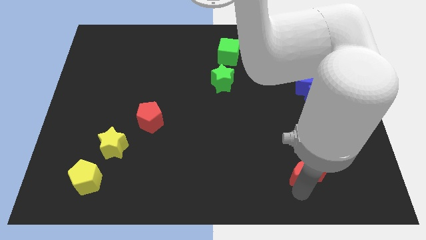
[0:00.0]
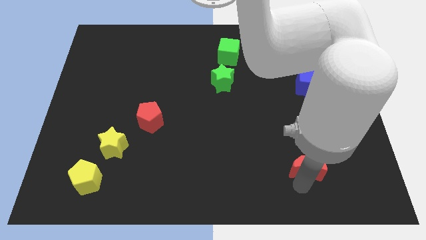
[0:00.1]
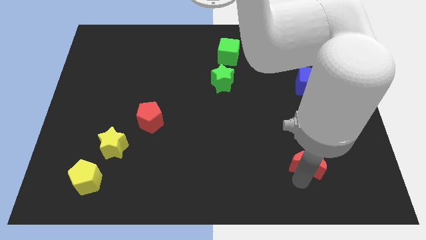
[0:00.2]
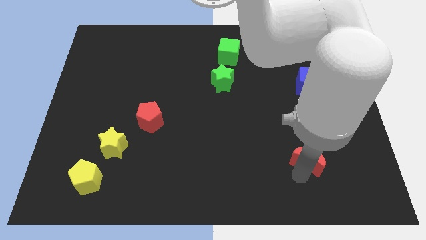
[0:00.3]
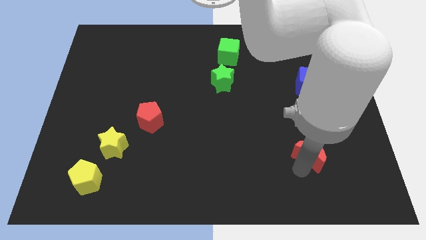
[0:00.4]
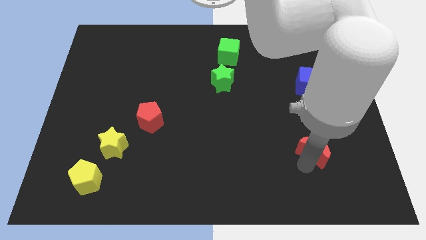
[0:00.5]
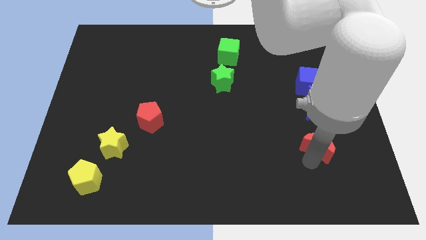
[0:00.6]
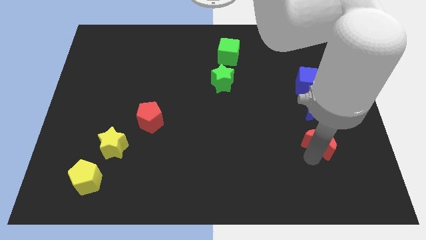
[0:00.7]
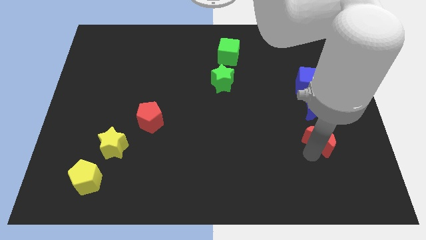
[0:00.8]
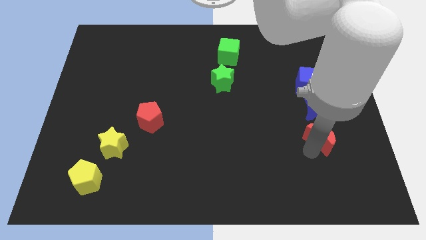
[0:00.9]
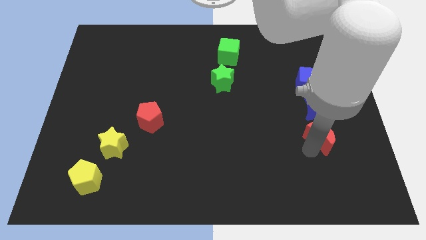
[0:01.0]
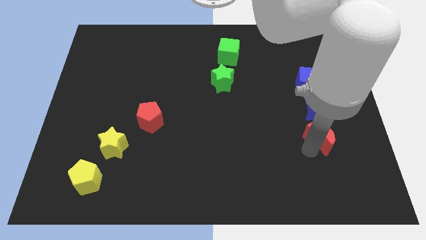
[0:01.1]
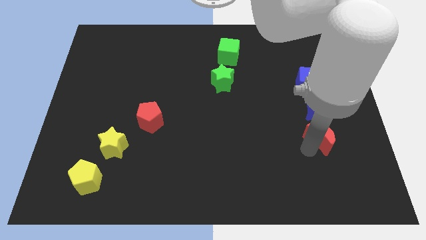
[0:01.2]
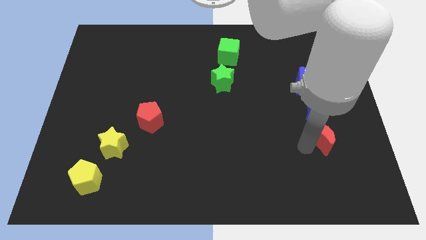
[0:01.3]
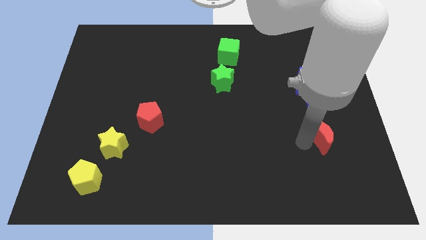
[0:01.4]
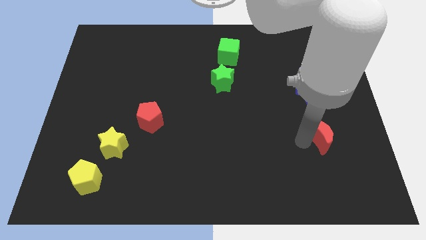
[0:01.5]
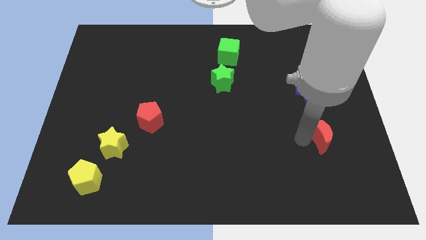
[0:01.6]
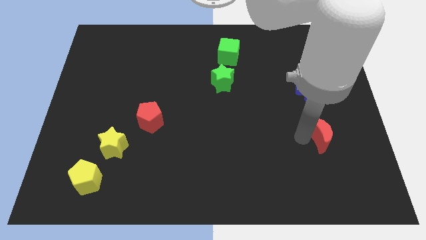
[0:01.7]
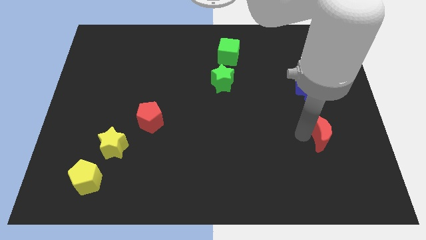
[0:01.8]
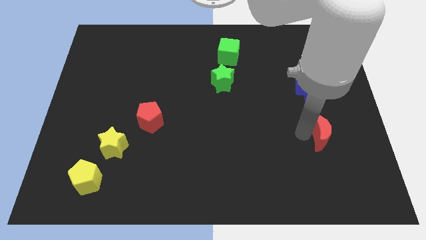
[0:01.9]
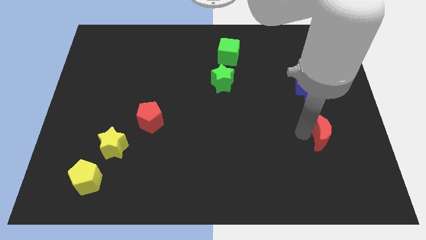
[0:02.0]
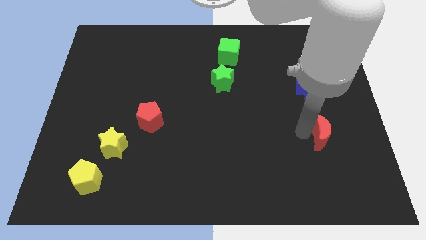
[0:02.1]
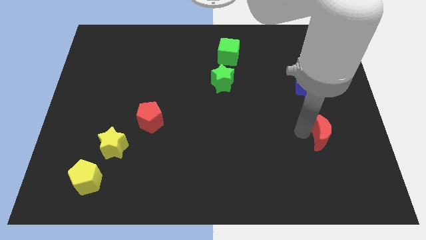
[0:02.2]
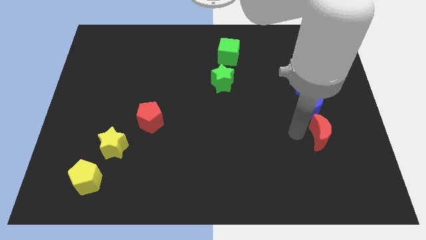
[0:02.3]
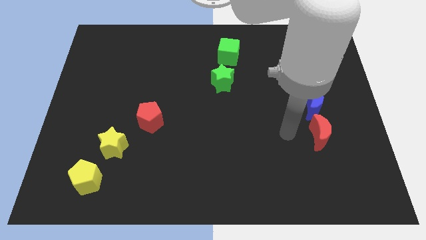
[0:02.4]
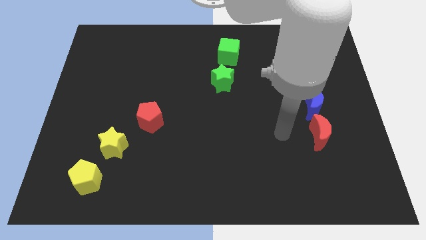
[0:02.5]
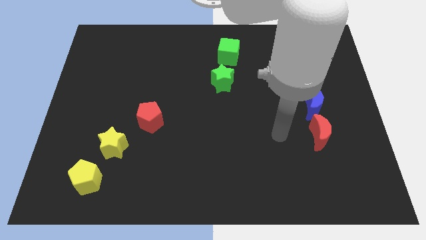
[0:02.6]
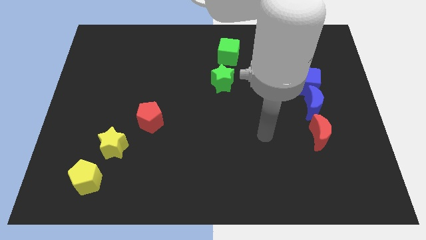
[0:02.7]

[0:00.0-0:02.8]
place red moon at the bottom of blue moon

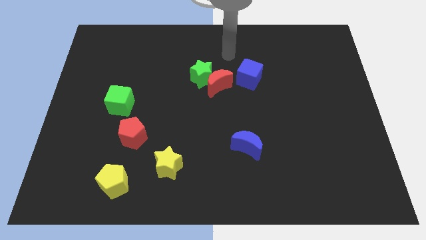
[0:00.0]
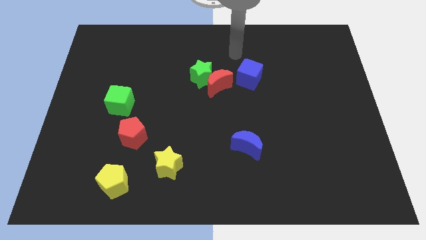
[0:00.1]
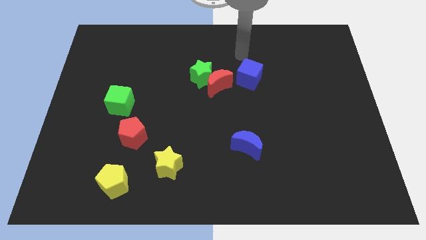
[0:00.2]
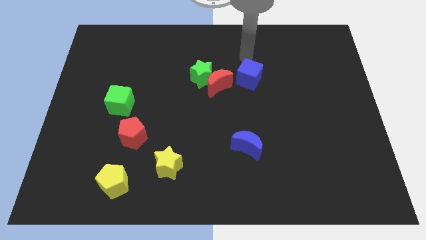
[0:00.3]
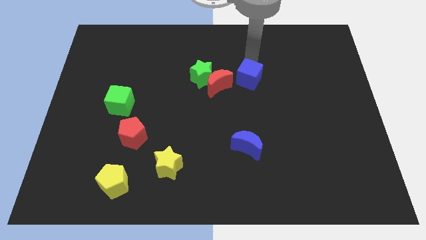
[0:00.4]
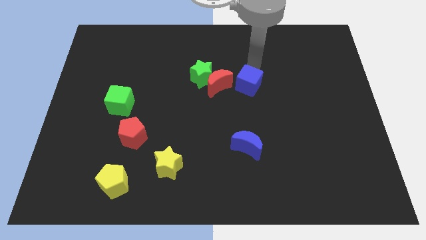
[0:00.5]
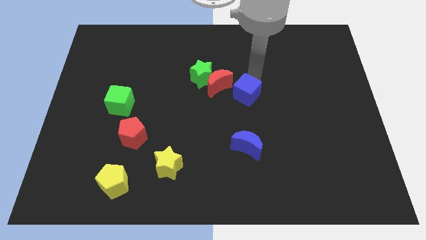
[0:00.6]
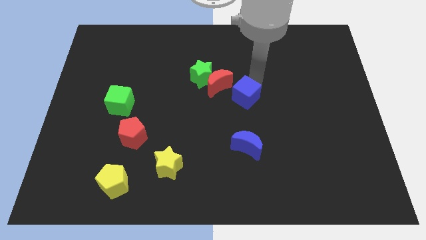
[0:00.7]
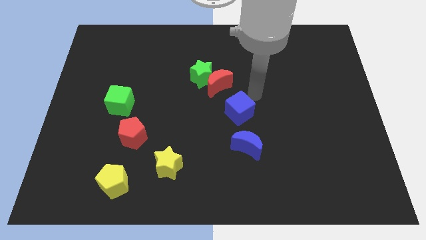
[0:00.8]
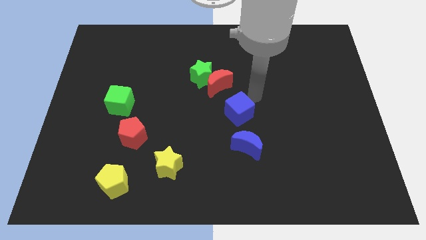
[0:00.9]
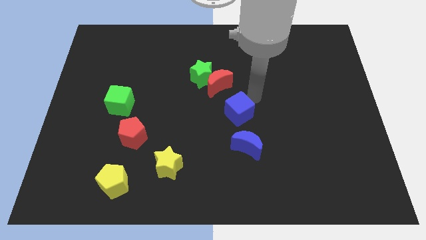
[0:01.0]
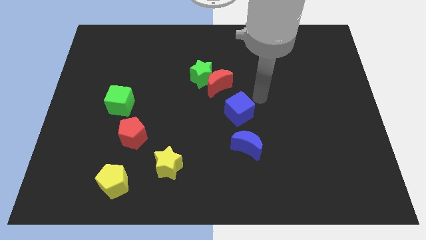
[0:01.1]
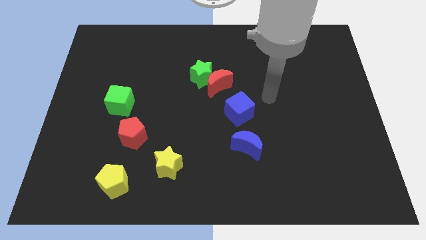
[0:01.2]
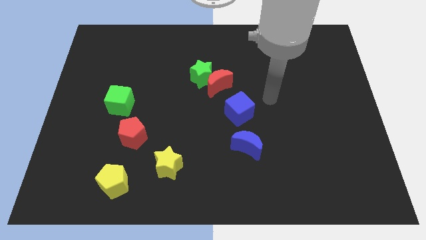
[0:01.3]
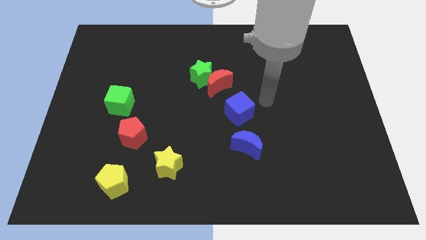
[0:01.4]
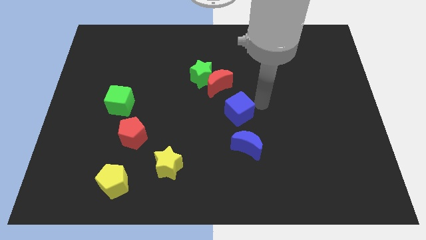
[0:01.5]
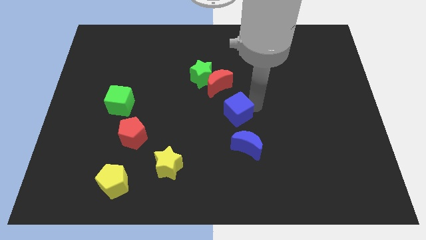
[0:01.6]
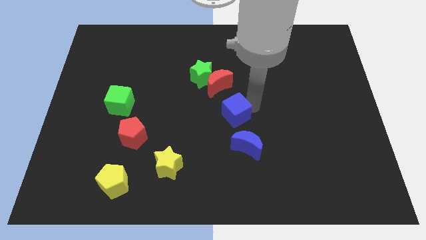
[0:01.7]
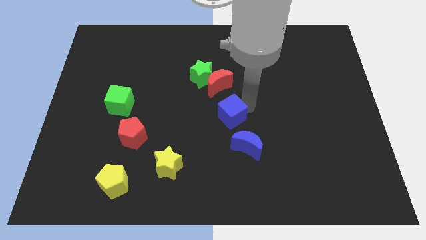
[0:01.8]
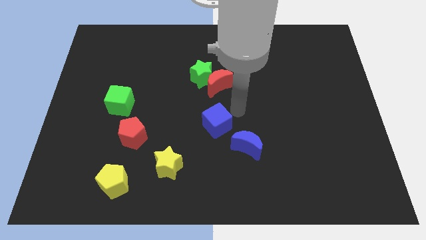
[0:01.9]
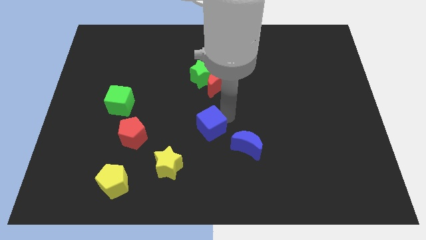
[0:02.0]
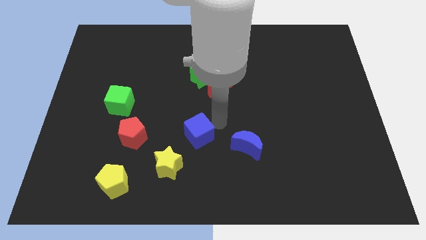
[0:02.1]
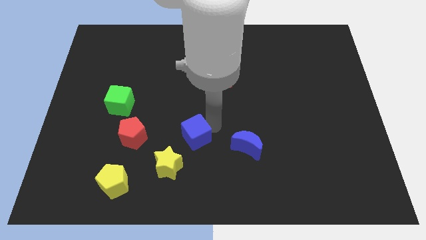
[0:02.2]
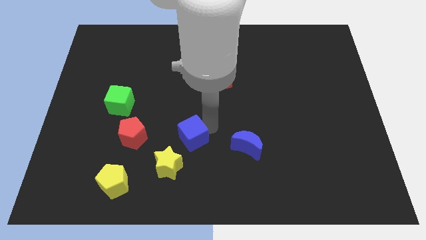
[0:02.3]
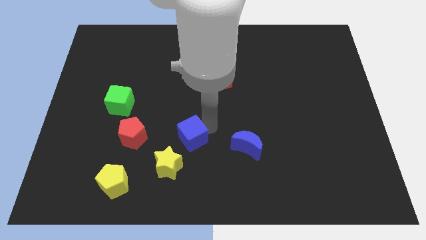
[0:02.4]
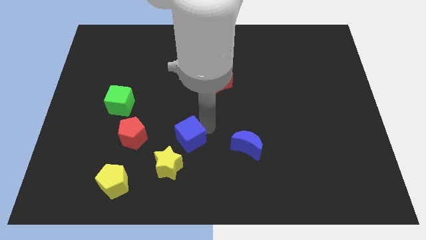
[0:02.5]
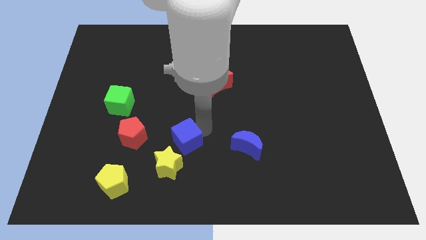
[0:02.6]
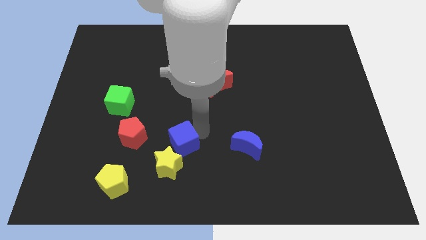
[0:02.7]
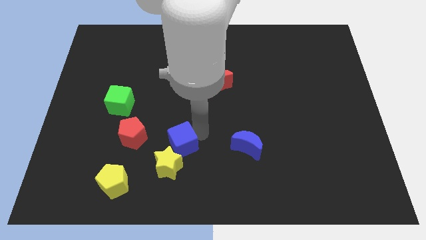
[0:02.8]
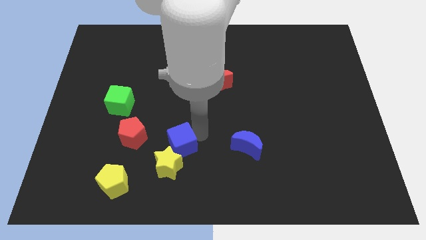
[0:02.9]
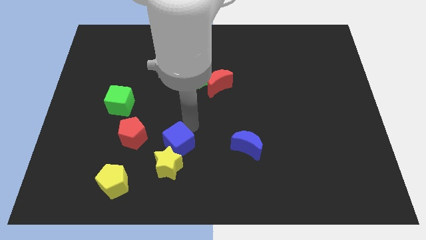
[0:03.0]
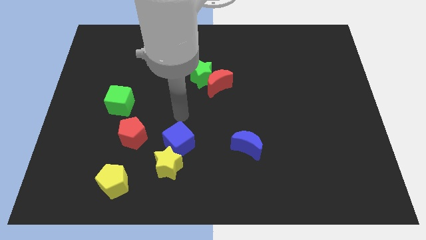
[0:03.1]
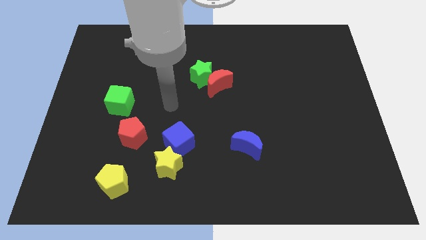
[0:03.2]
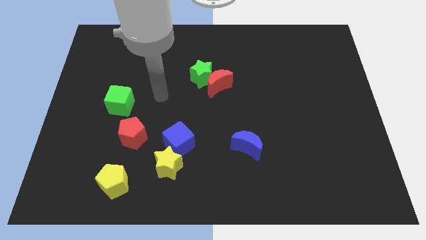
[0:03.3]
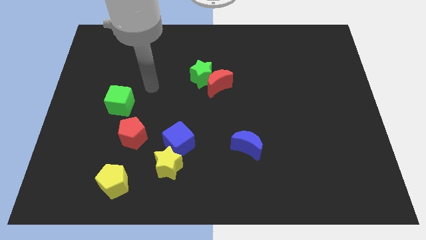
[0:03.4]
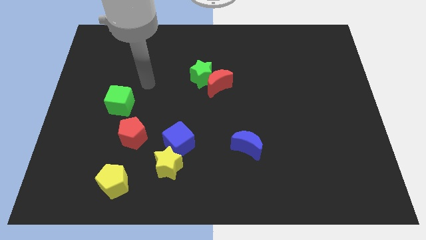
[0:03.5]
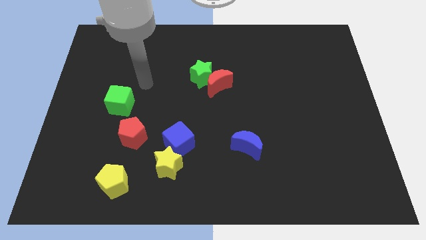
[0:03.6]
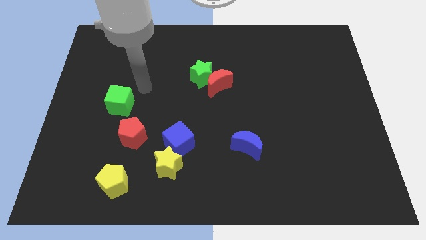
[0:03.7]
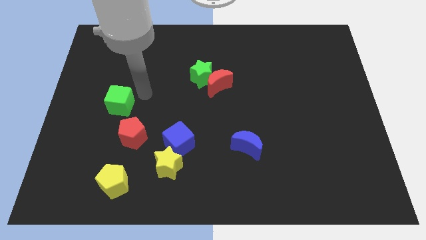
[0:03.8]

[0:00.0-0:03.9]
place the blue cube above the yellow star

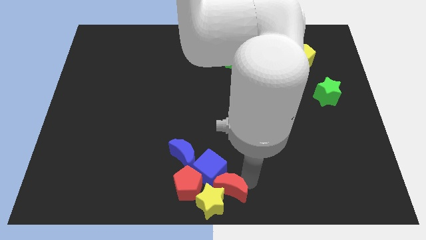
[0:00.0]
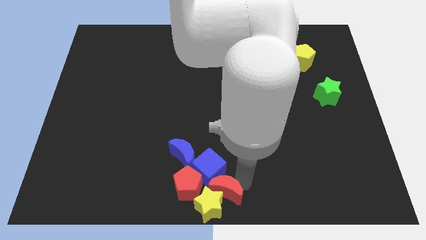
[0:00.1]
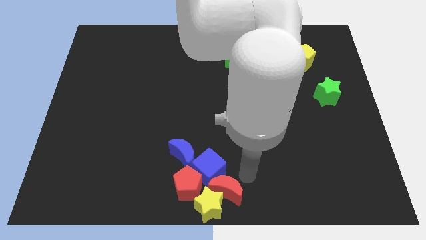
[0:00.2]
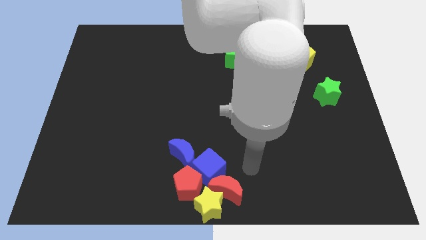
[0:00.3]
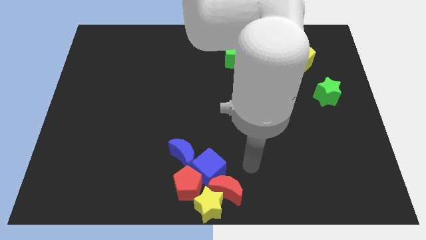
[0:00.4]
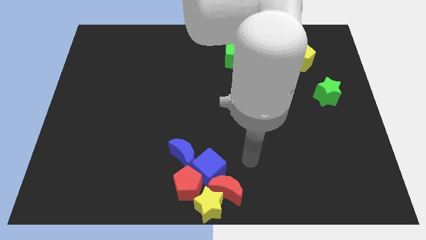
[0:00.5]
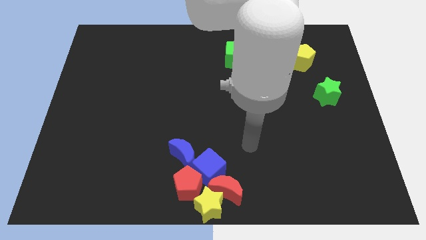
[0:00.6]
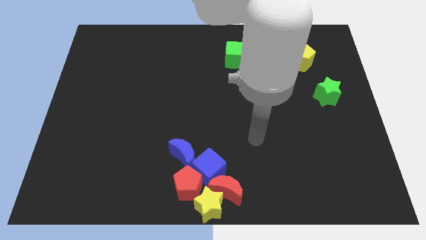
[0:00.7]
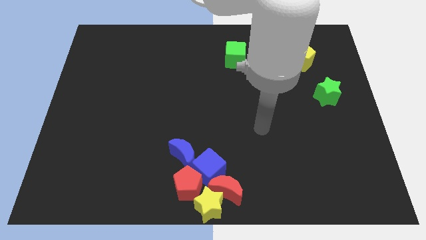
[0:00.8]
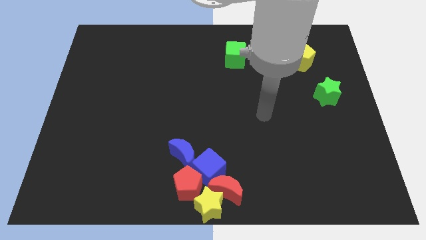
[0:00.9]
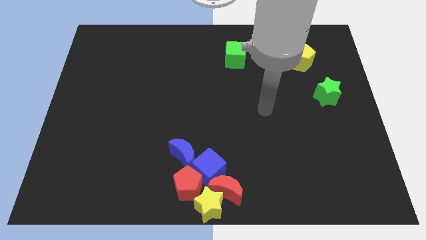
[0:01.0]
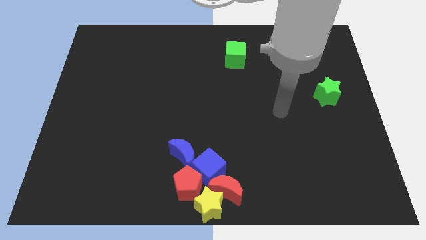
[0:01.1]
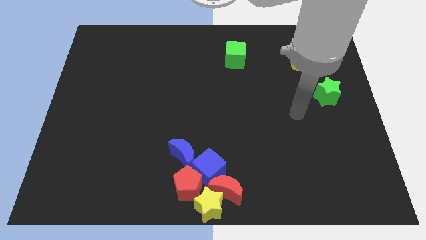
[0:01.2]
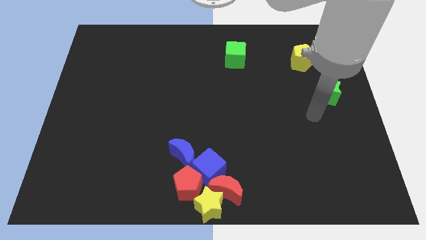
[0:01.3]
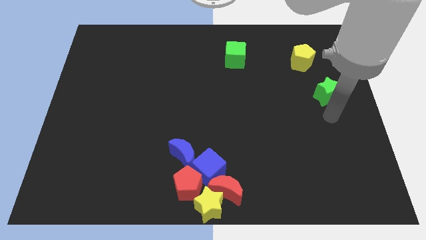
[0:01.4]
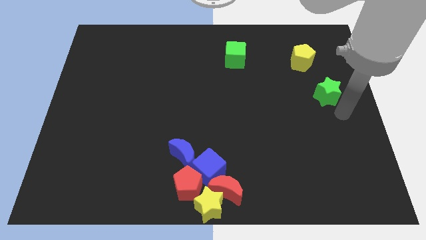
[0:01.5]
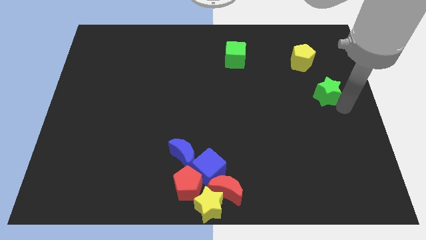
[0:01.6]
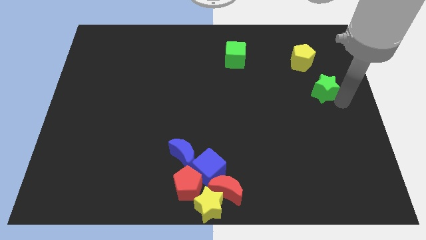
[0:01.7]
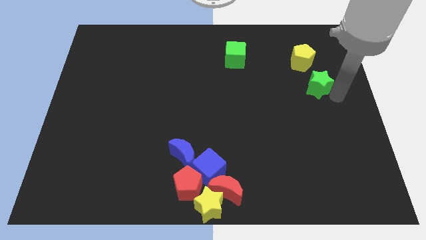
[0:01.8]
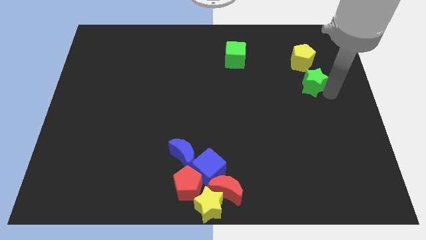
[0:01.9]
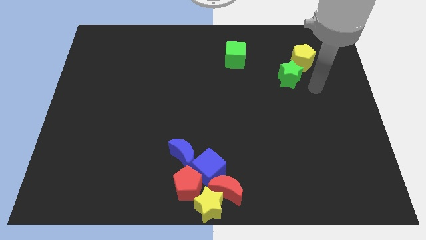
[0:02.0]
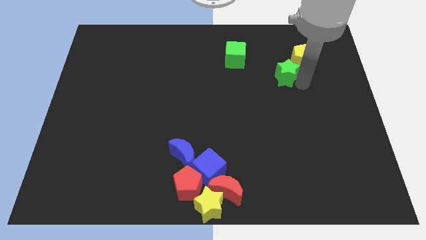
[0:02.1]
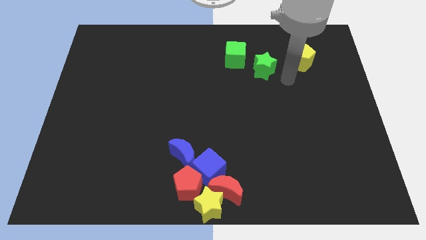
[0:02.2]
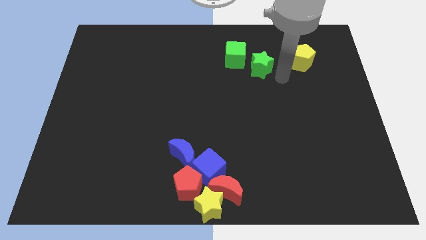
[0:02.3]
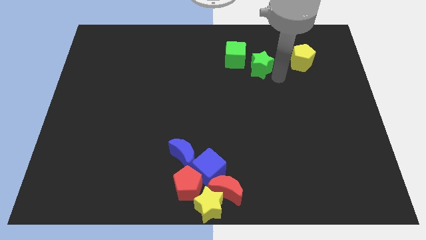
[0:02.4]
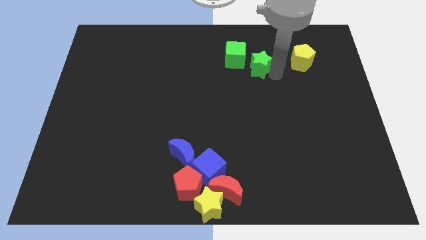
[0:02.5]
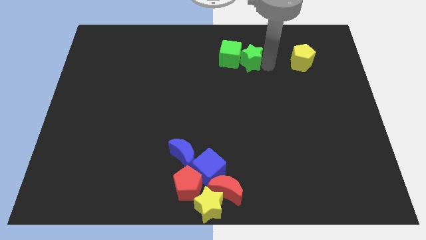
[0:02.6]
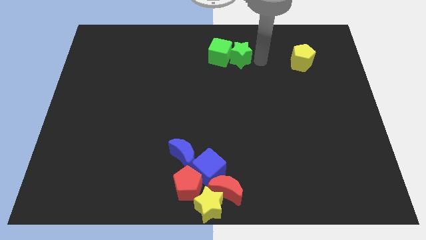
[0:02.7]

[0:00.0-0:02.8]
place the green star right to the green cube
